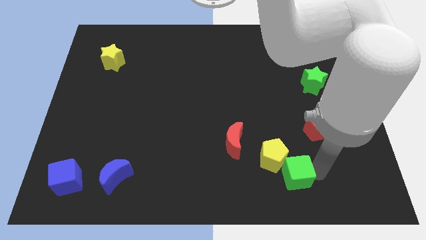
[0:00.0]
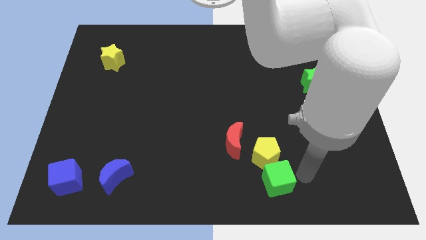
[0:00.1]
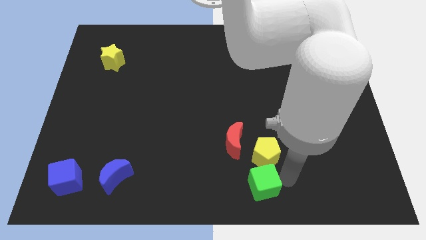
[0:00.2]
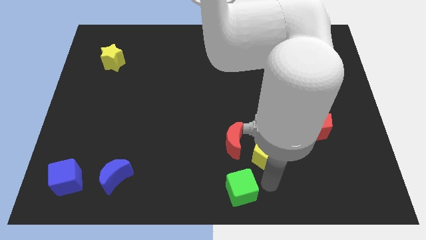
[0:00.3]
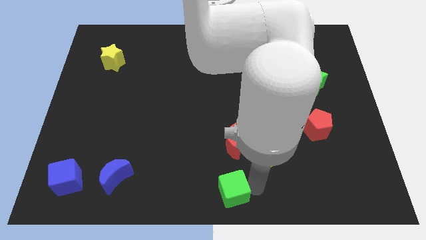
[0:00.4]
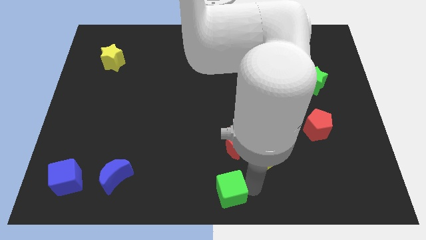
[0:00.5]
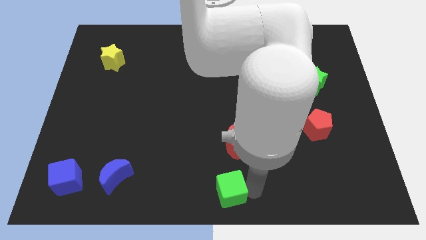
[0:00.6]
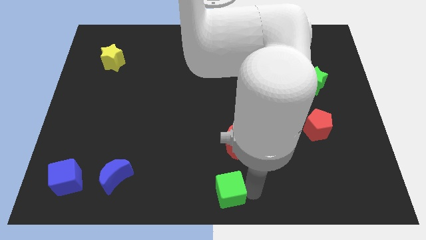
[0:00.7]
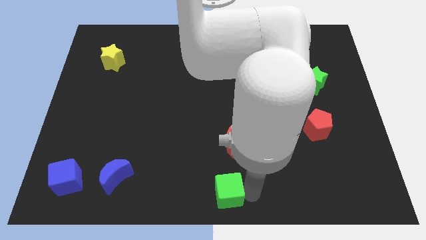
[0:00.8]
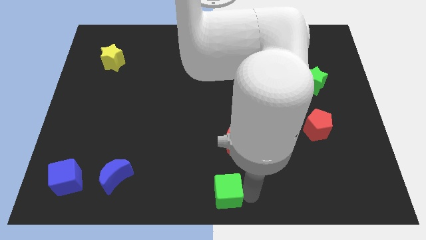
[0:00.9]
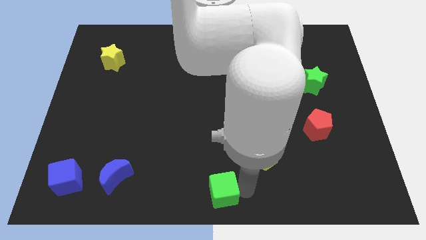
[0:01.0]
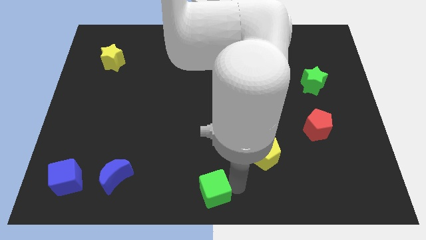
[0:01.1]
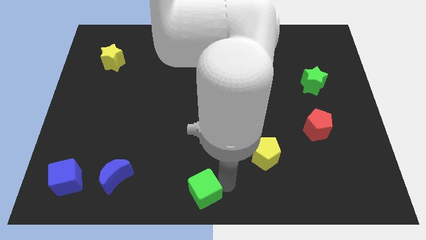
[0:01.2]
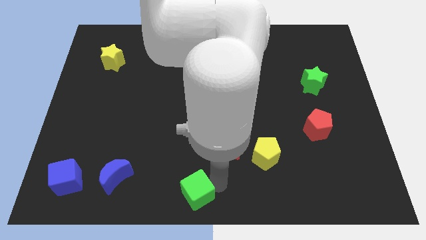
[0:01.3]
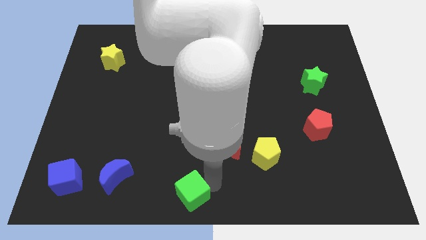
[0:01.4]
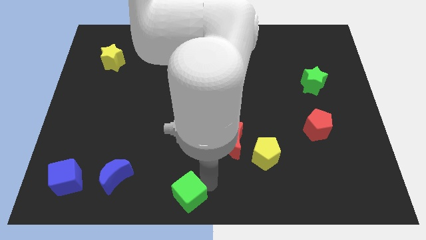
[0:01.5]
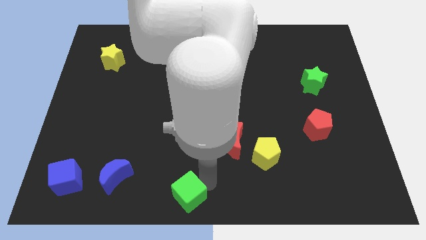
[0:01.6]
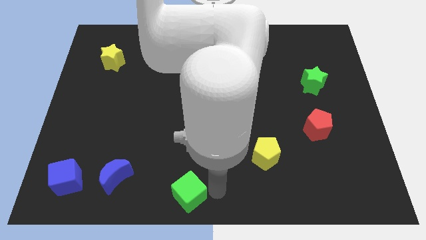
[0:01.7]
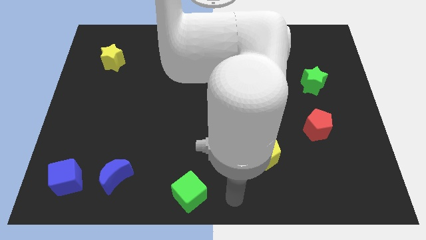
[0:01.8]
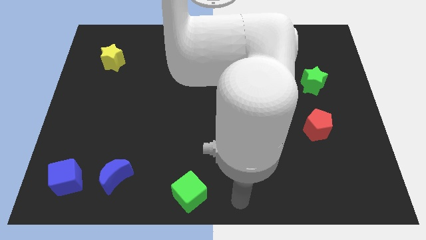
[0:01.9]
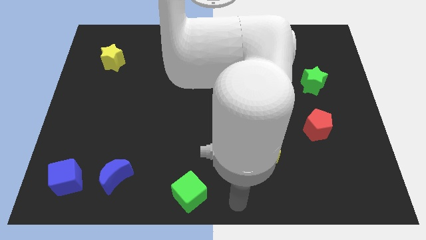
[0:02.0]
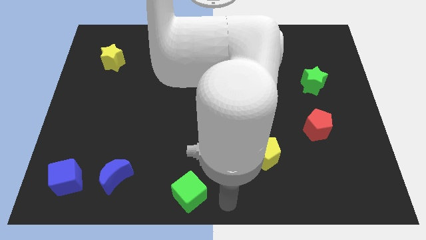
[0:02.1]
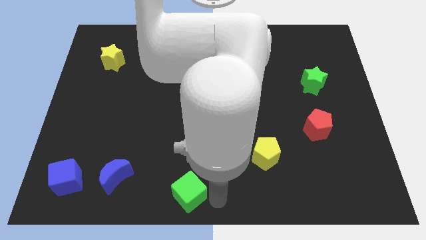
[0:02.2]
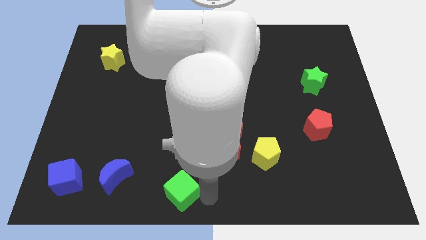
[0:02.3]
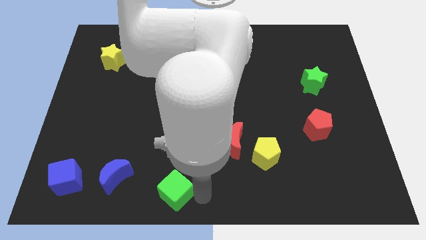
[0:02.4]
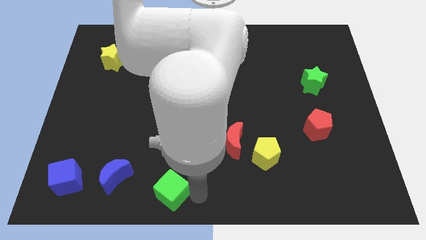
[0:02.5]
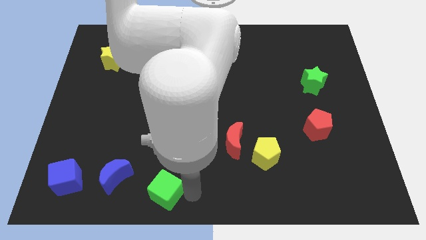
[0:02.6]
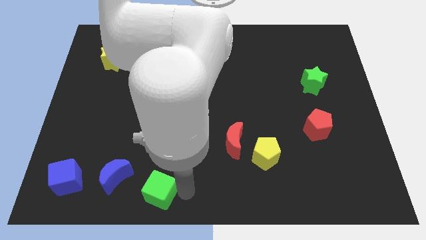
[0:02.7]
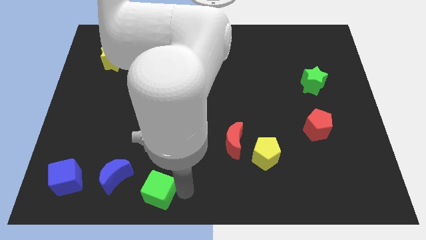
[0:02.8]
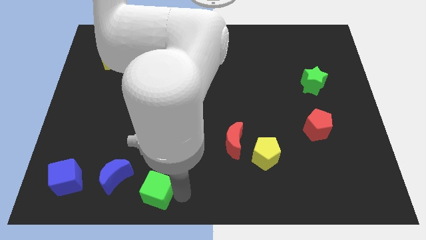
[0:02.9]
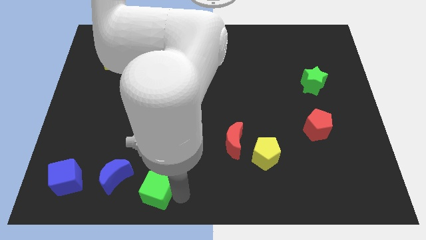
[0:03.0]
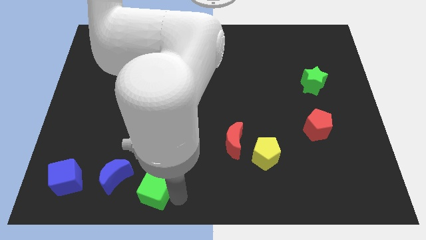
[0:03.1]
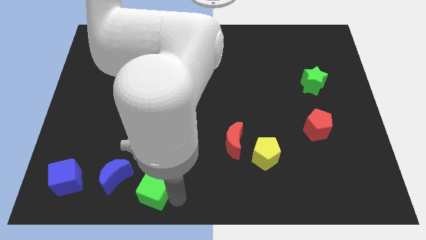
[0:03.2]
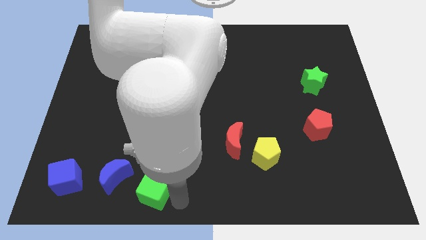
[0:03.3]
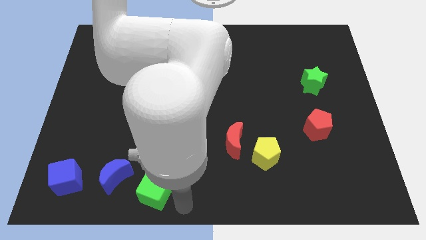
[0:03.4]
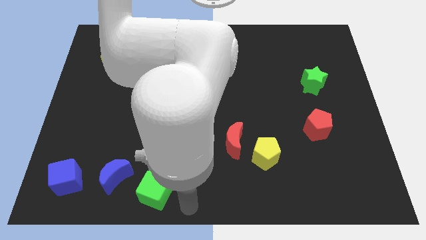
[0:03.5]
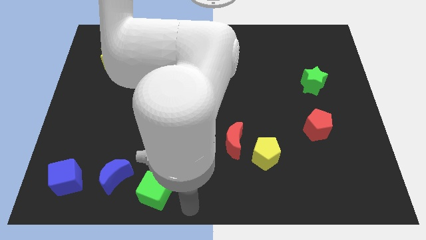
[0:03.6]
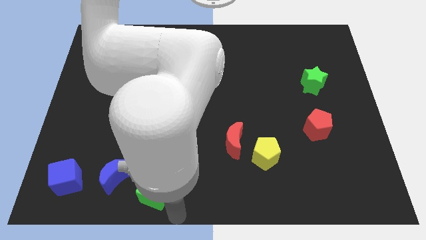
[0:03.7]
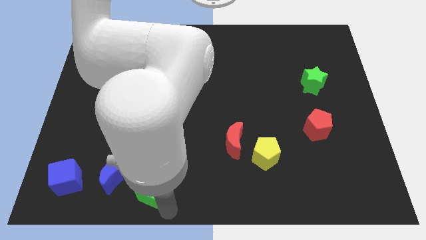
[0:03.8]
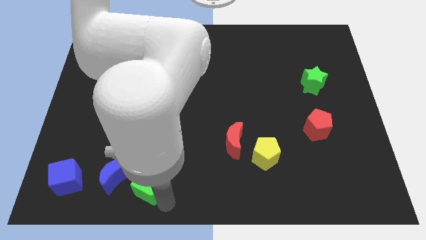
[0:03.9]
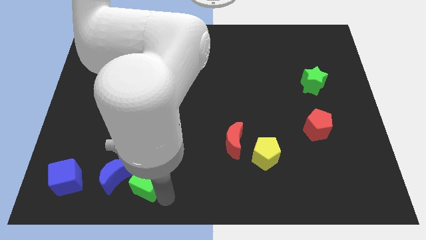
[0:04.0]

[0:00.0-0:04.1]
adjust the green cube at the right side of the blue moon

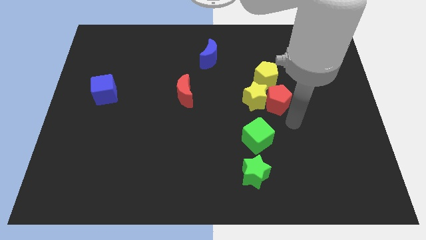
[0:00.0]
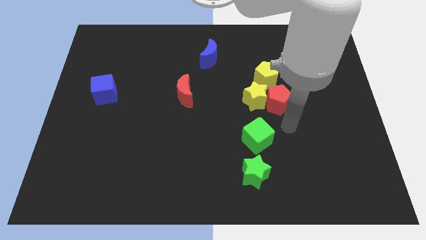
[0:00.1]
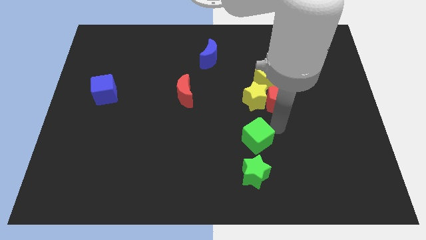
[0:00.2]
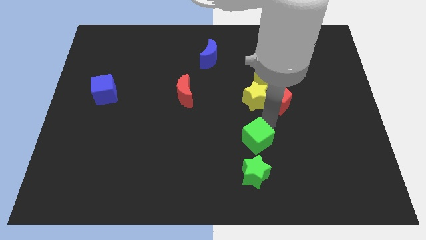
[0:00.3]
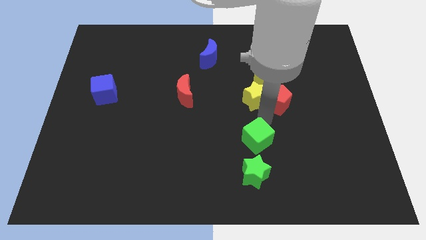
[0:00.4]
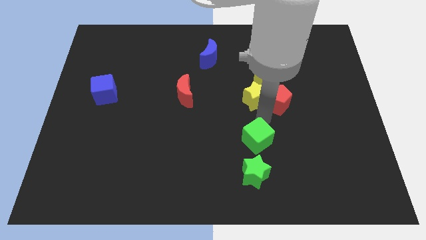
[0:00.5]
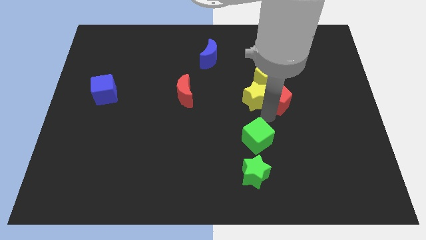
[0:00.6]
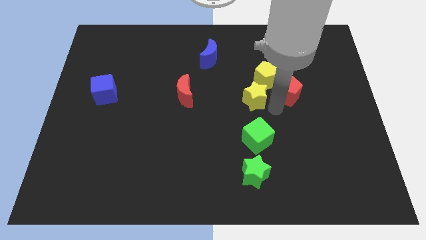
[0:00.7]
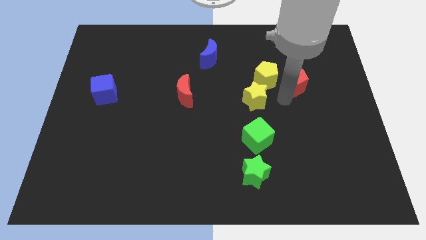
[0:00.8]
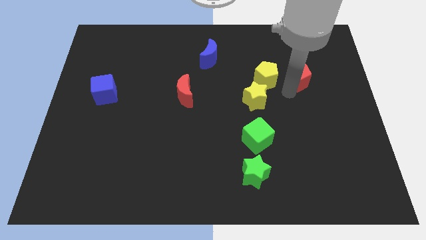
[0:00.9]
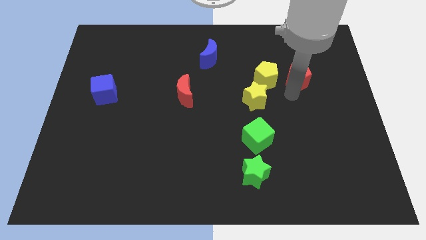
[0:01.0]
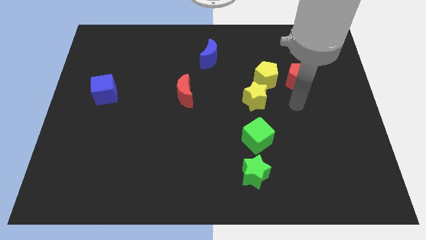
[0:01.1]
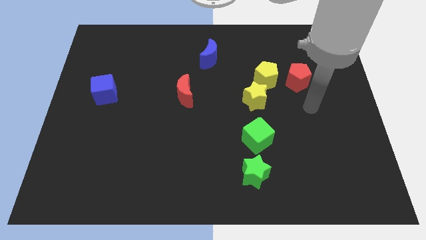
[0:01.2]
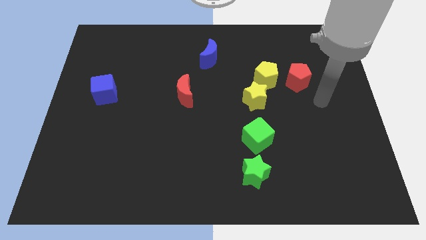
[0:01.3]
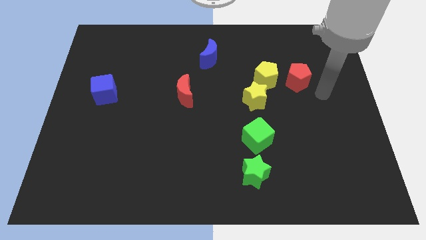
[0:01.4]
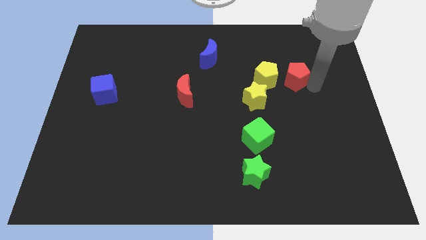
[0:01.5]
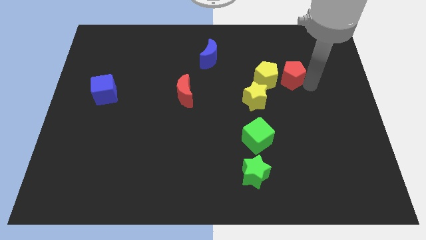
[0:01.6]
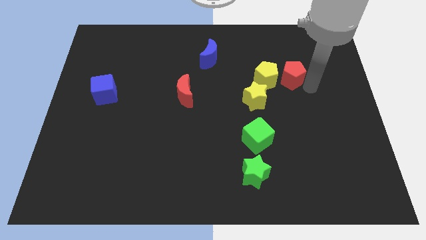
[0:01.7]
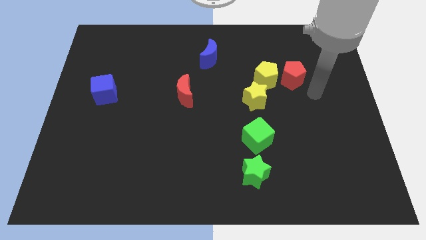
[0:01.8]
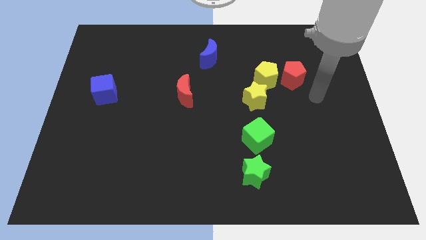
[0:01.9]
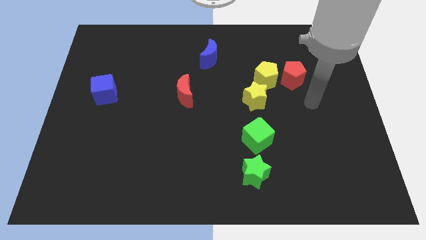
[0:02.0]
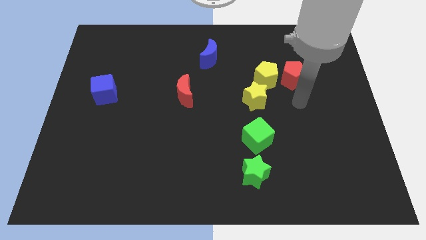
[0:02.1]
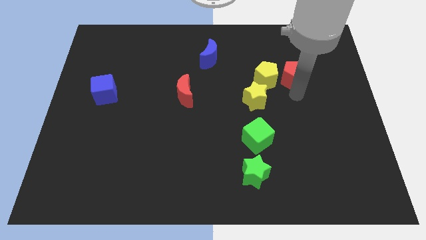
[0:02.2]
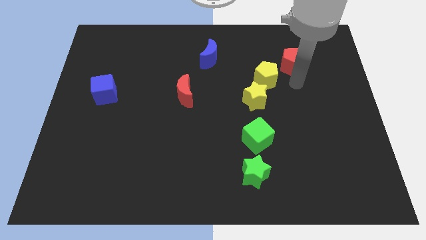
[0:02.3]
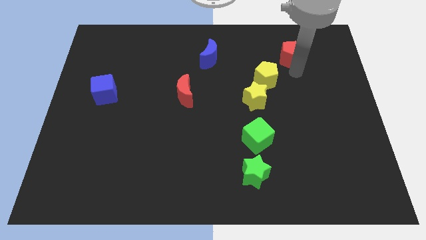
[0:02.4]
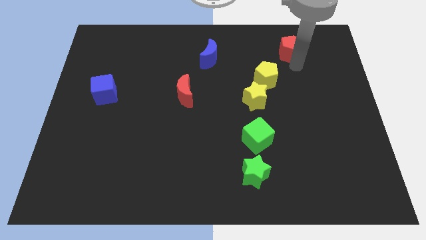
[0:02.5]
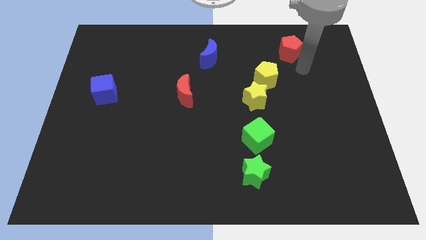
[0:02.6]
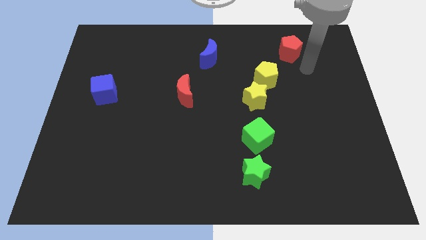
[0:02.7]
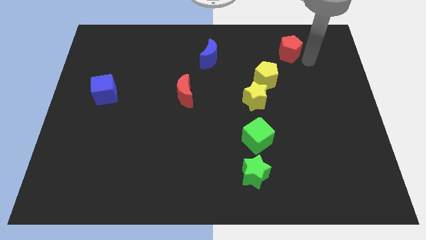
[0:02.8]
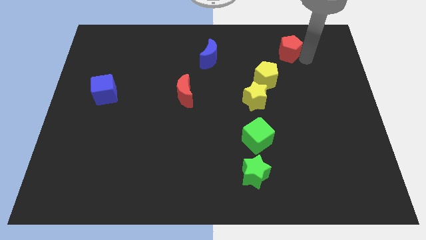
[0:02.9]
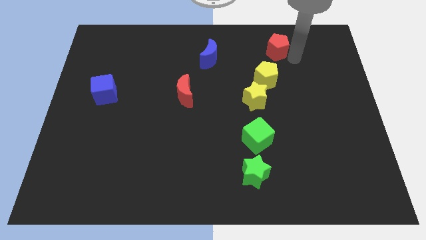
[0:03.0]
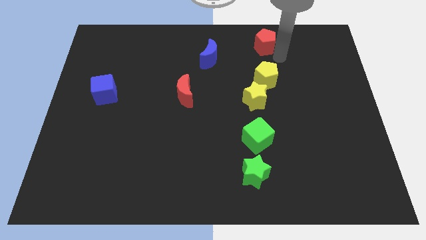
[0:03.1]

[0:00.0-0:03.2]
push the red pentagon to the top right

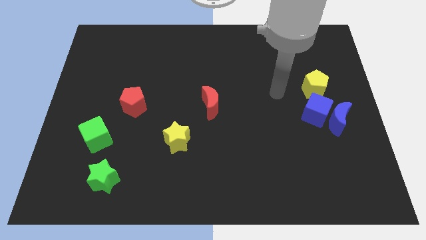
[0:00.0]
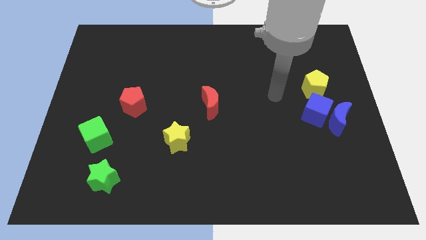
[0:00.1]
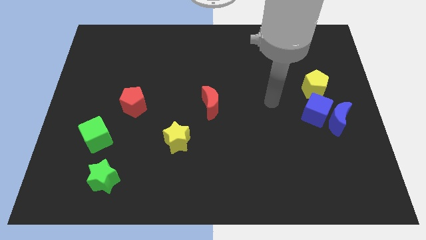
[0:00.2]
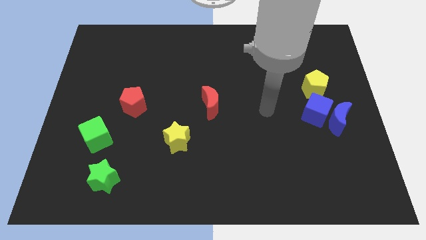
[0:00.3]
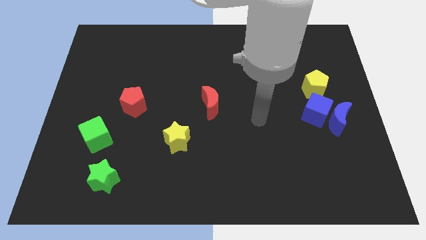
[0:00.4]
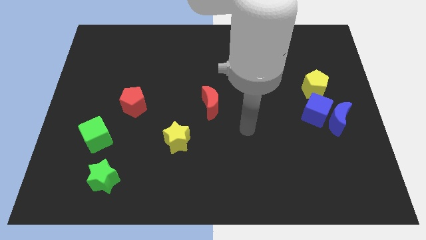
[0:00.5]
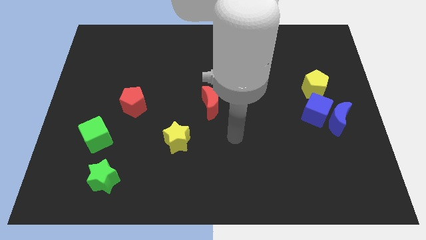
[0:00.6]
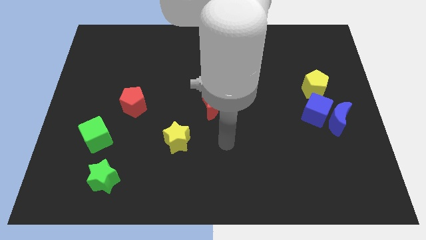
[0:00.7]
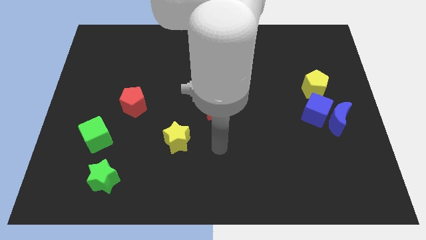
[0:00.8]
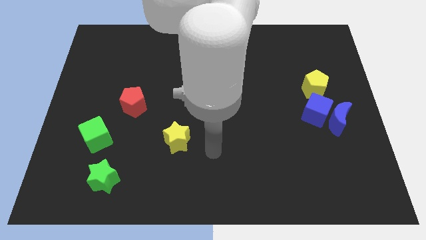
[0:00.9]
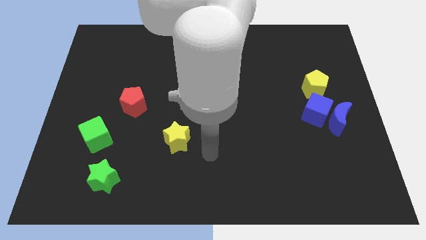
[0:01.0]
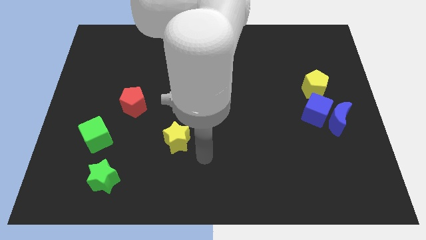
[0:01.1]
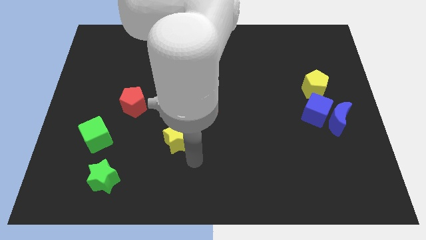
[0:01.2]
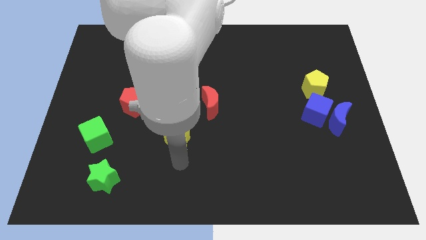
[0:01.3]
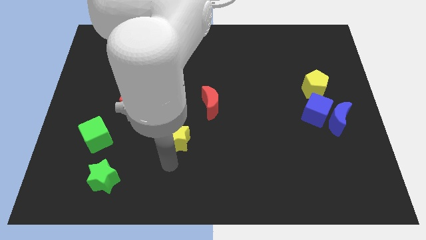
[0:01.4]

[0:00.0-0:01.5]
move your arm towards the bottom of the yellow star
